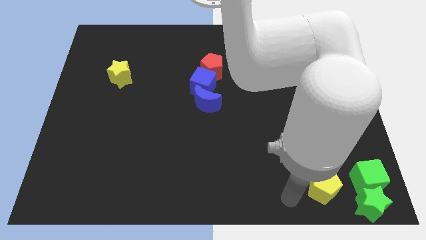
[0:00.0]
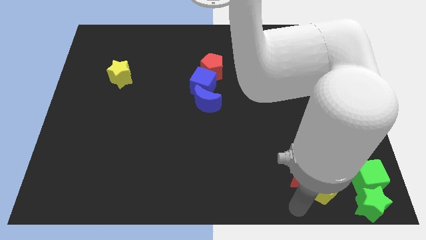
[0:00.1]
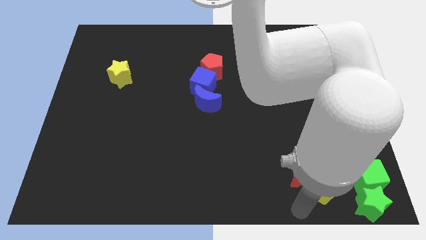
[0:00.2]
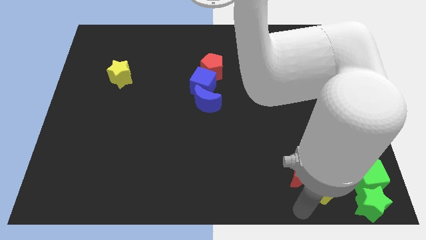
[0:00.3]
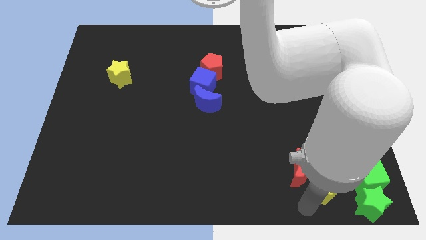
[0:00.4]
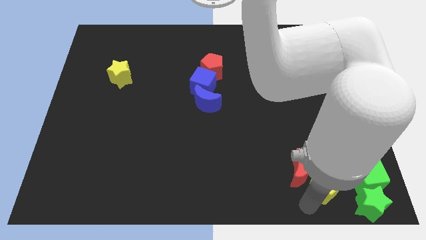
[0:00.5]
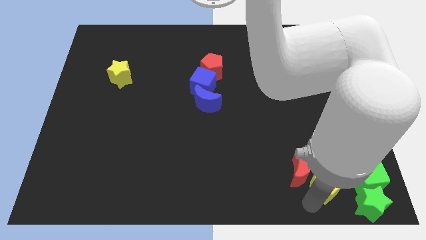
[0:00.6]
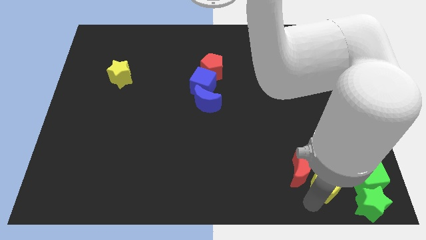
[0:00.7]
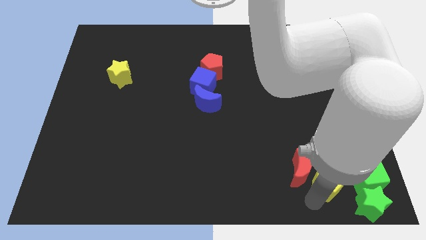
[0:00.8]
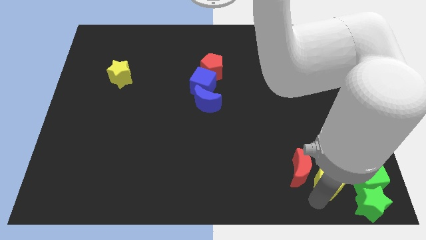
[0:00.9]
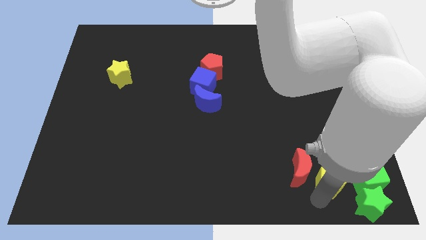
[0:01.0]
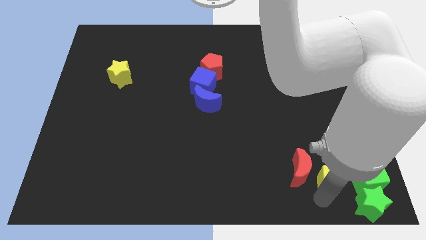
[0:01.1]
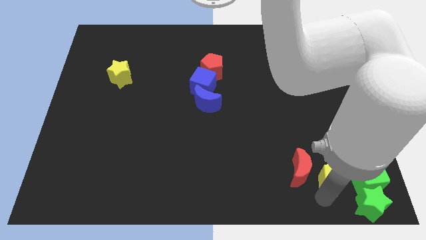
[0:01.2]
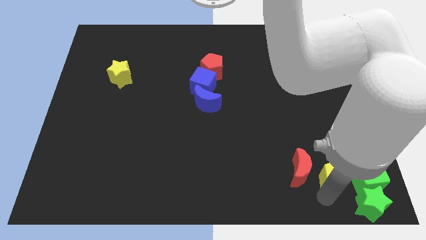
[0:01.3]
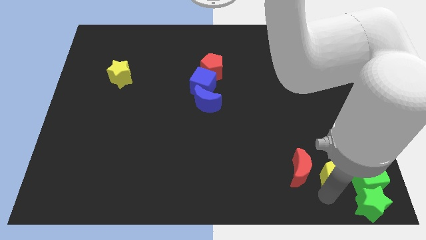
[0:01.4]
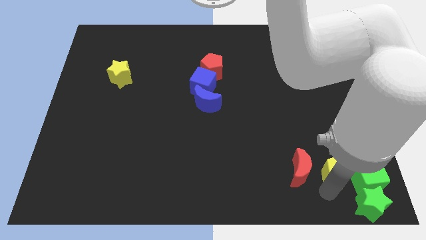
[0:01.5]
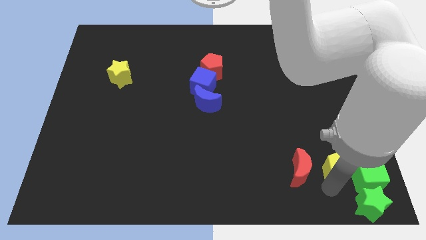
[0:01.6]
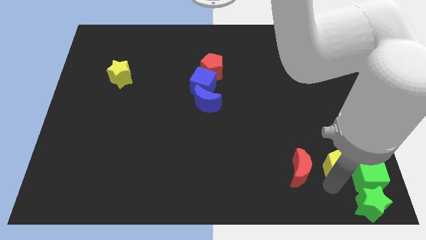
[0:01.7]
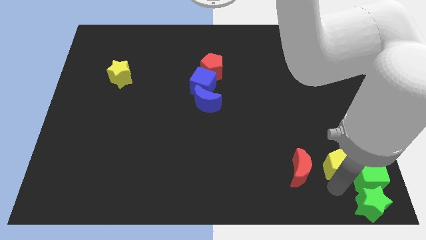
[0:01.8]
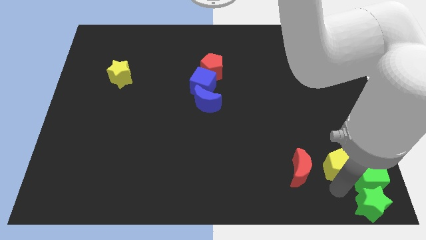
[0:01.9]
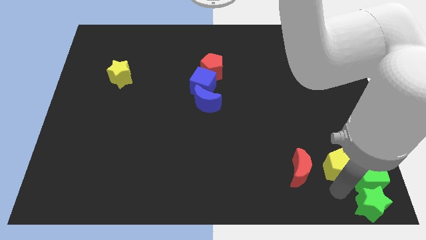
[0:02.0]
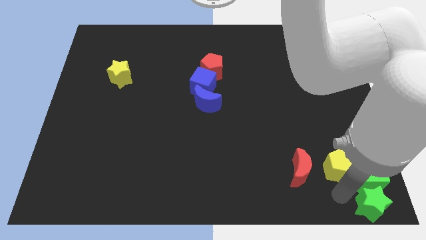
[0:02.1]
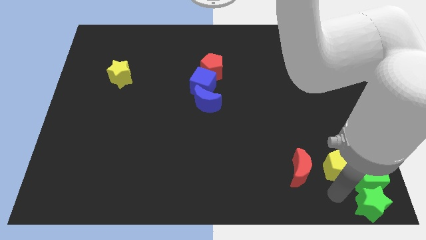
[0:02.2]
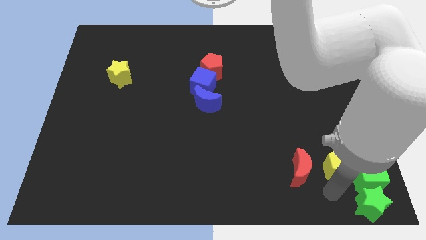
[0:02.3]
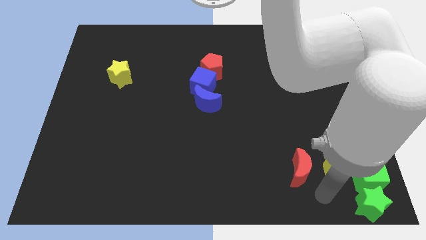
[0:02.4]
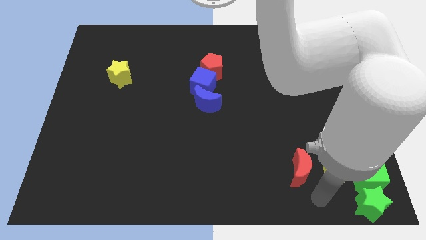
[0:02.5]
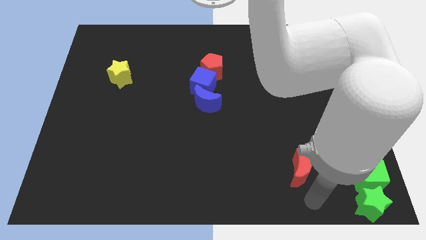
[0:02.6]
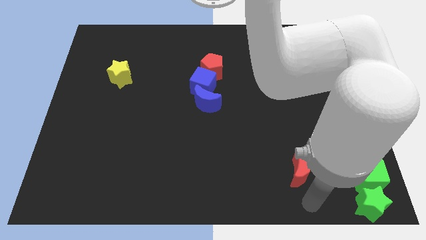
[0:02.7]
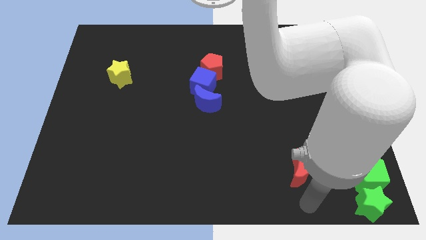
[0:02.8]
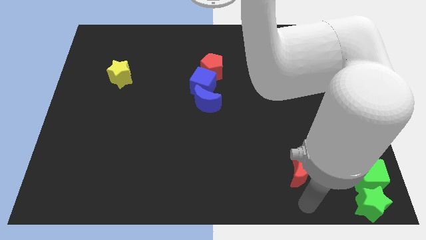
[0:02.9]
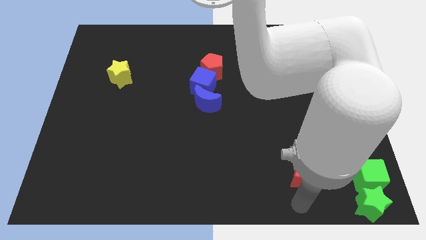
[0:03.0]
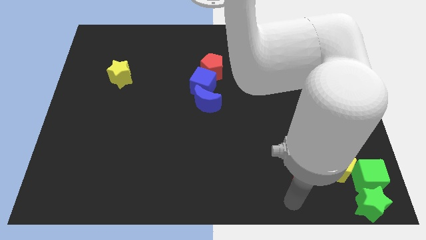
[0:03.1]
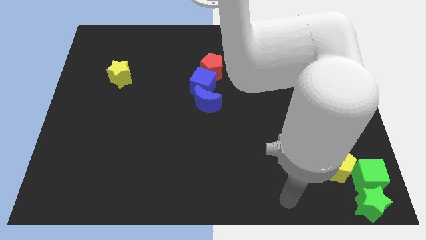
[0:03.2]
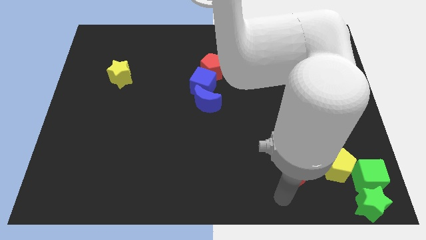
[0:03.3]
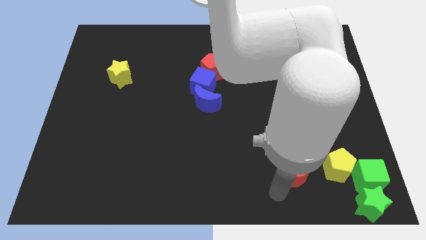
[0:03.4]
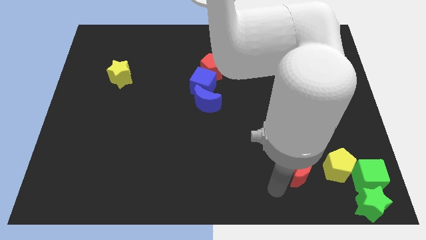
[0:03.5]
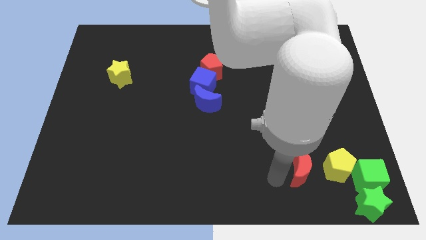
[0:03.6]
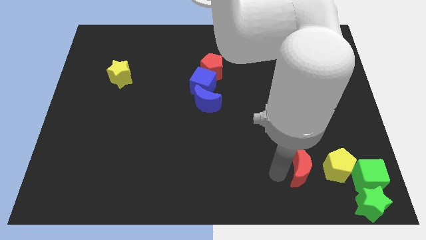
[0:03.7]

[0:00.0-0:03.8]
push yellow pentagon beside green cube

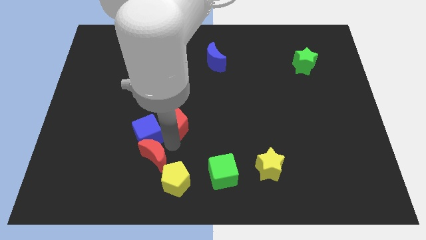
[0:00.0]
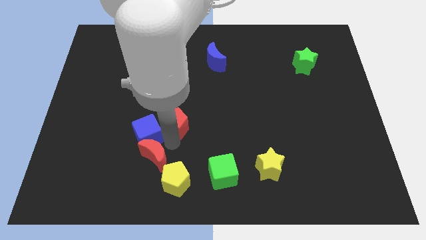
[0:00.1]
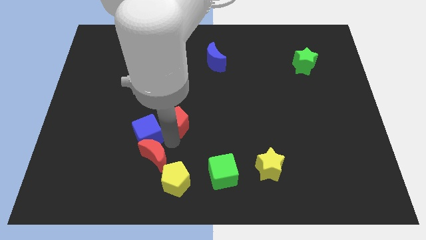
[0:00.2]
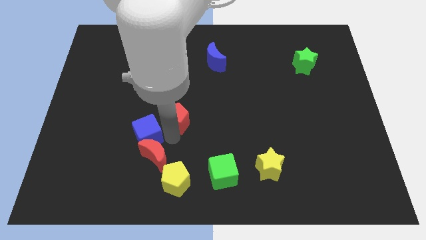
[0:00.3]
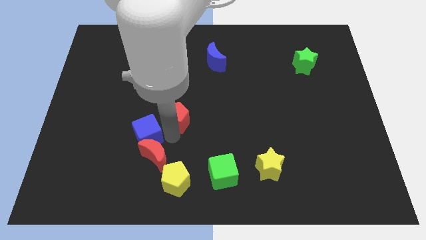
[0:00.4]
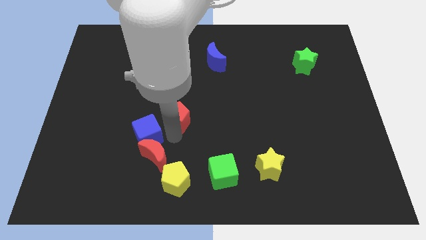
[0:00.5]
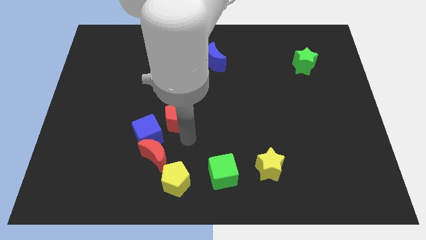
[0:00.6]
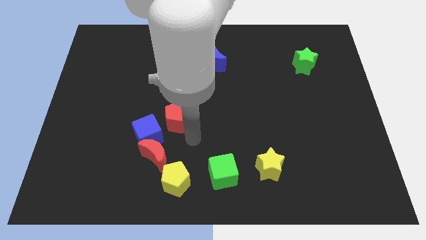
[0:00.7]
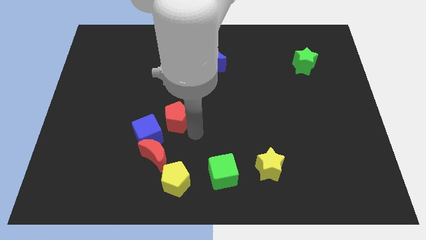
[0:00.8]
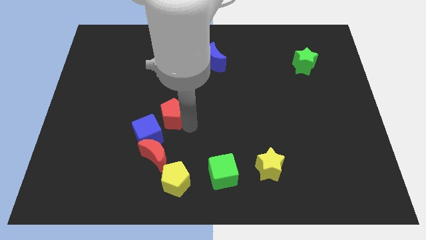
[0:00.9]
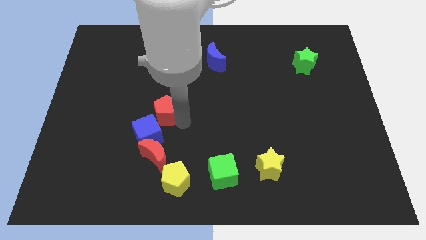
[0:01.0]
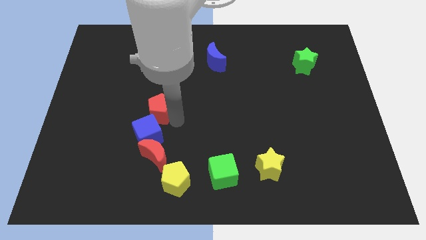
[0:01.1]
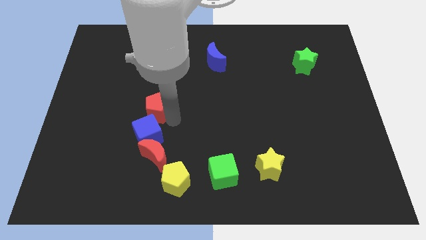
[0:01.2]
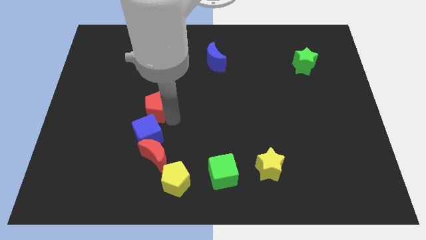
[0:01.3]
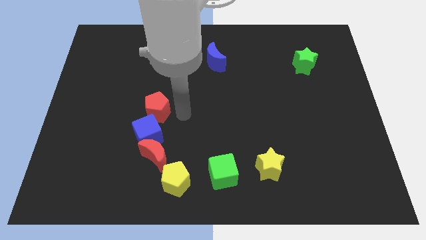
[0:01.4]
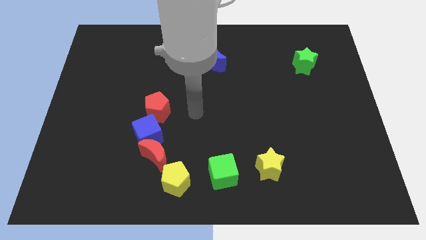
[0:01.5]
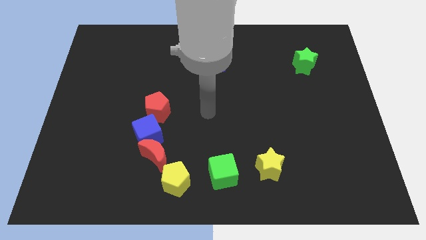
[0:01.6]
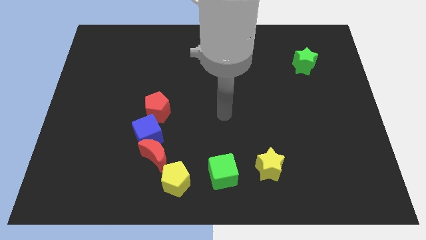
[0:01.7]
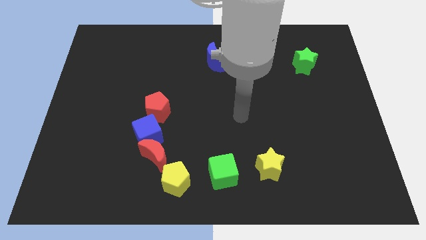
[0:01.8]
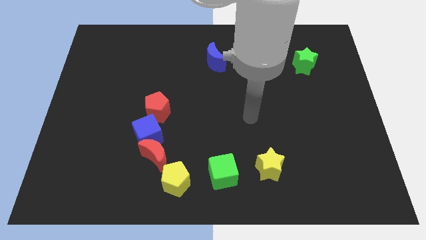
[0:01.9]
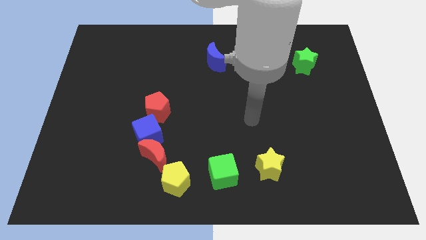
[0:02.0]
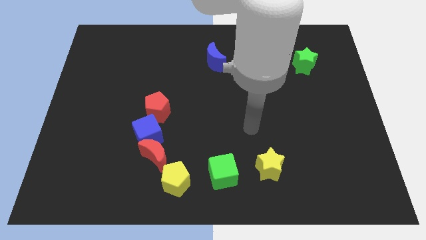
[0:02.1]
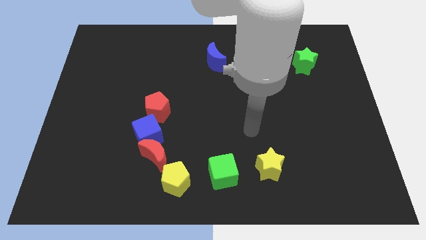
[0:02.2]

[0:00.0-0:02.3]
move the red pentagon above the blue cube

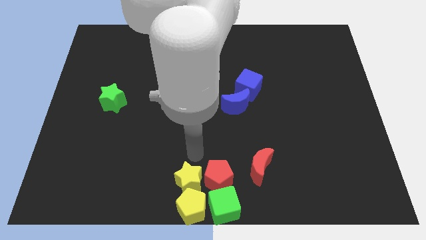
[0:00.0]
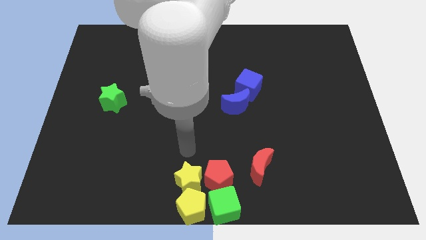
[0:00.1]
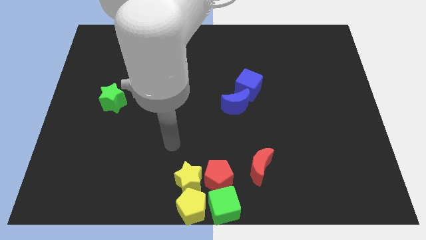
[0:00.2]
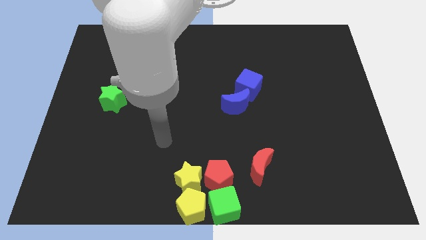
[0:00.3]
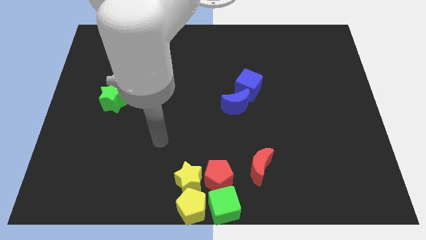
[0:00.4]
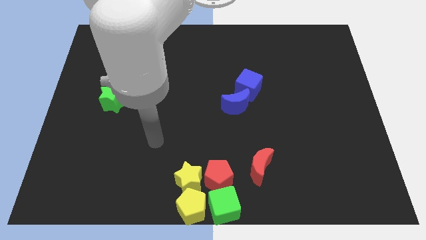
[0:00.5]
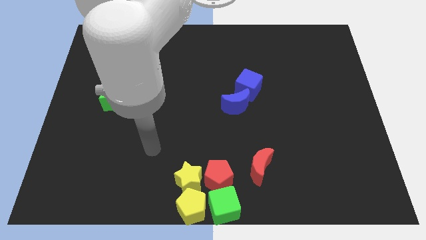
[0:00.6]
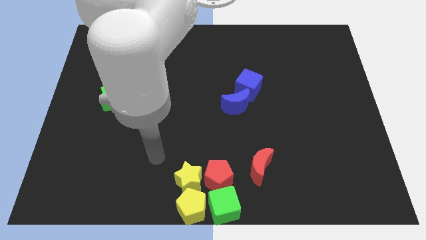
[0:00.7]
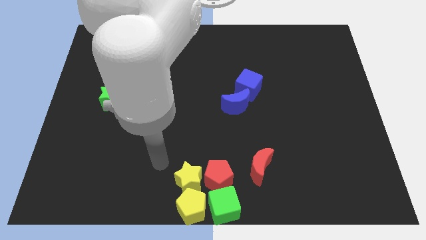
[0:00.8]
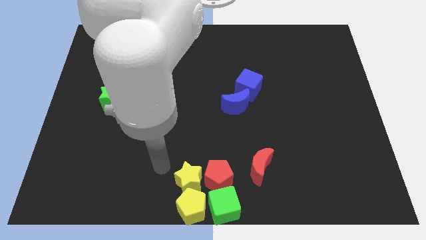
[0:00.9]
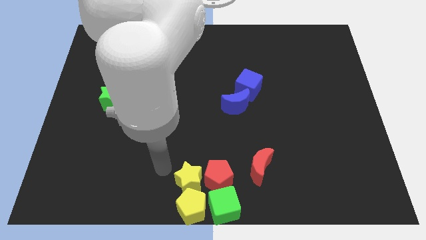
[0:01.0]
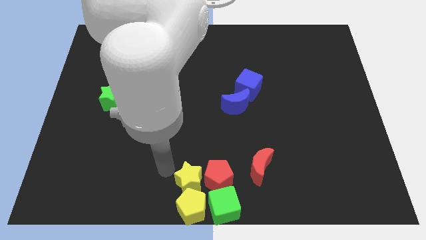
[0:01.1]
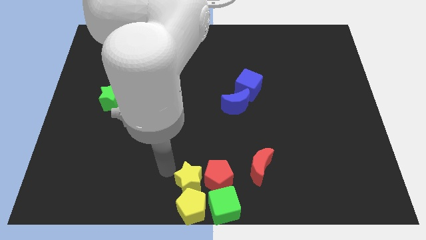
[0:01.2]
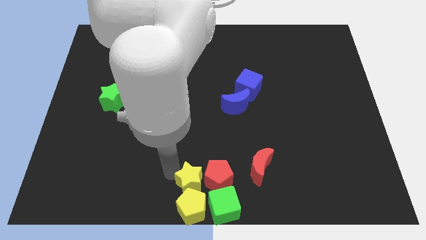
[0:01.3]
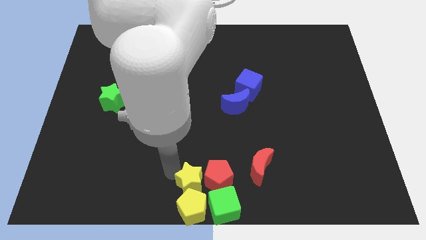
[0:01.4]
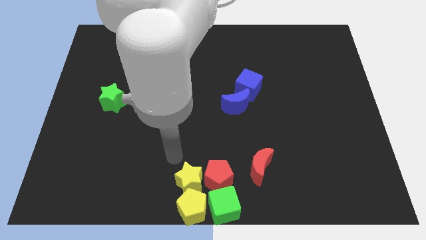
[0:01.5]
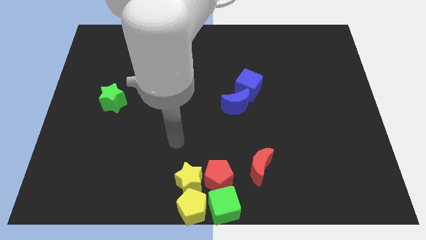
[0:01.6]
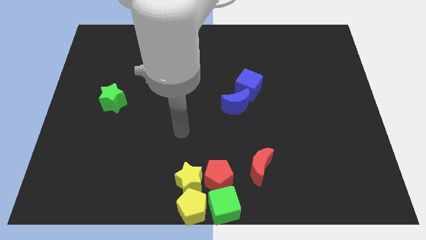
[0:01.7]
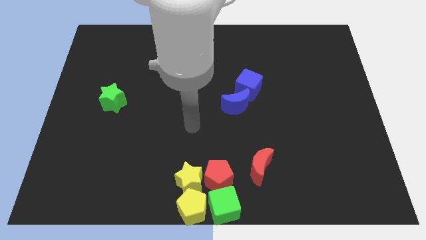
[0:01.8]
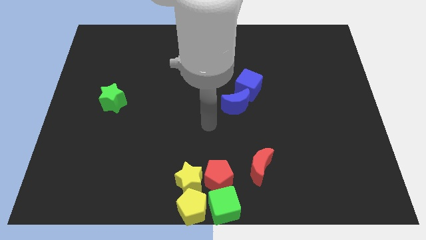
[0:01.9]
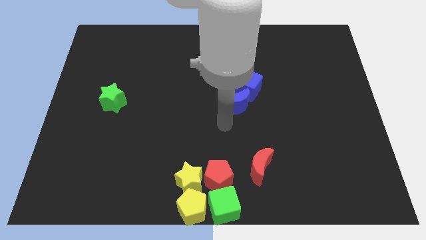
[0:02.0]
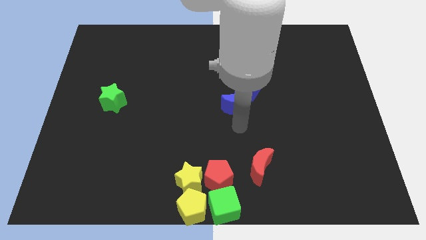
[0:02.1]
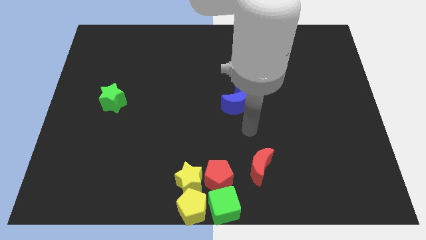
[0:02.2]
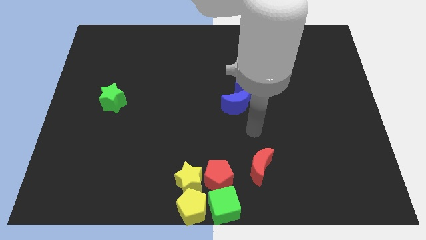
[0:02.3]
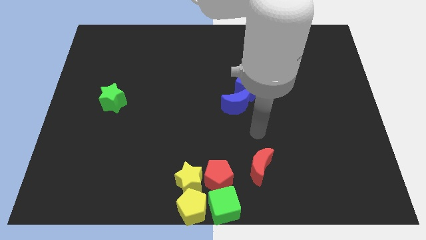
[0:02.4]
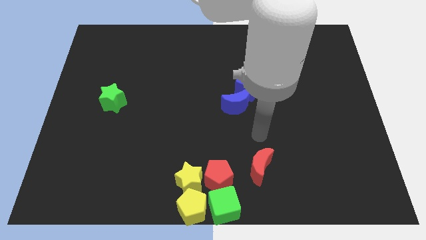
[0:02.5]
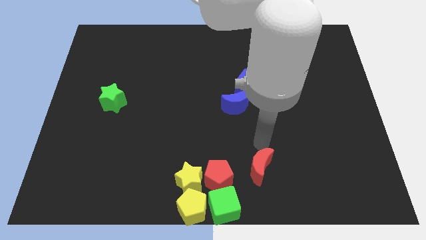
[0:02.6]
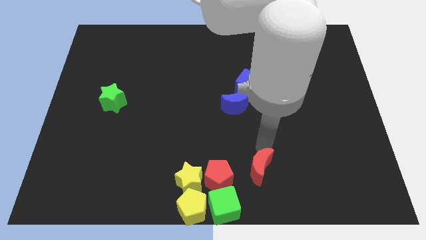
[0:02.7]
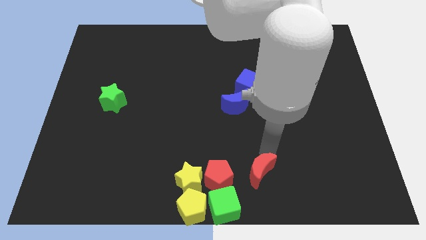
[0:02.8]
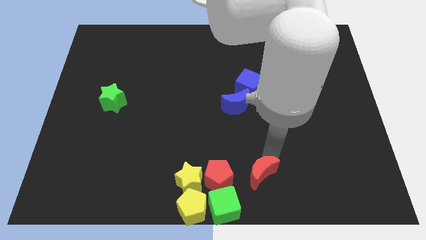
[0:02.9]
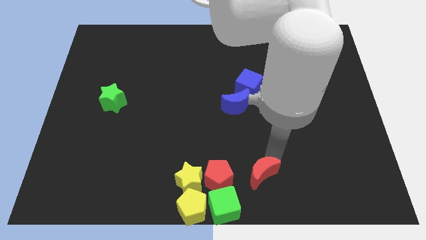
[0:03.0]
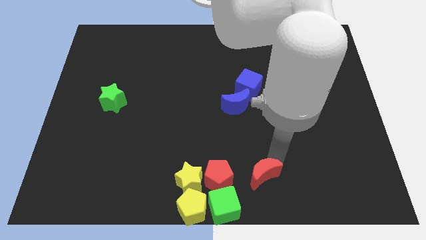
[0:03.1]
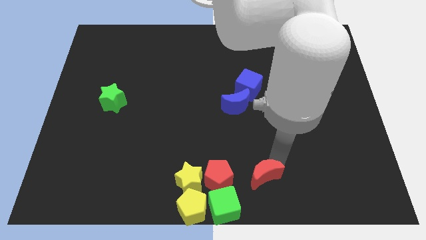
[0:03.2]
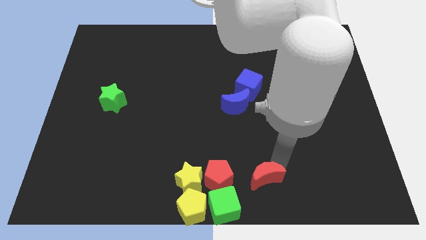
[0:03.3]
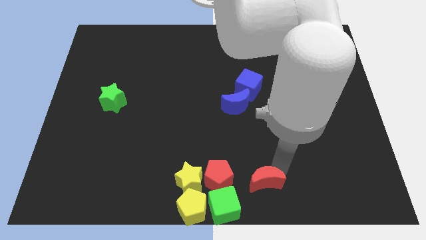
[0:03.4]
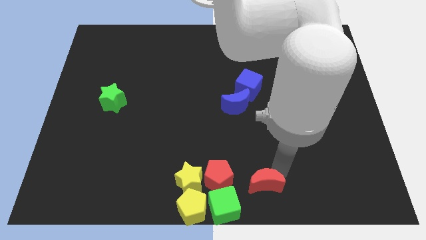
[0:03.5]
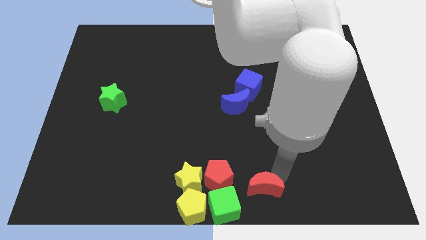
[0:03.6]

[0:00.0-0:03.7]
push the red crescent slightly to the bottom
